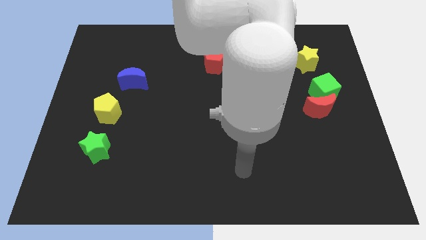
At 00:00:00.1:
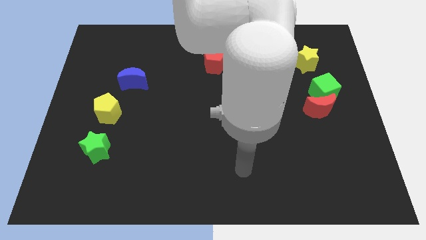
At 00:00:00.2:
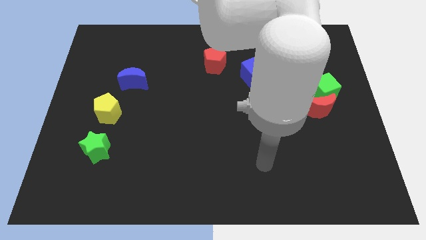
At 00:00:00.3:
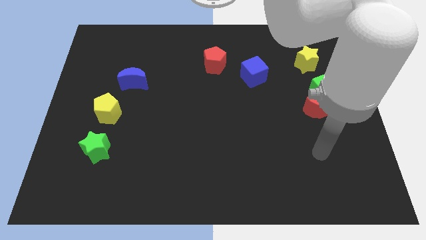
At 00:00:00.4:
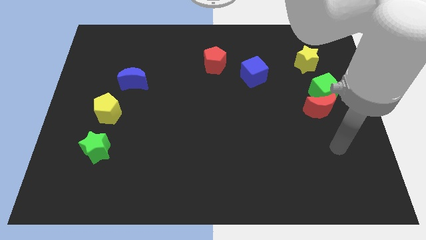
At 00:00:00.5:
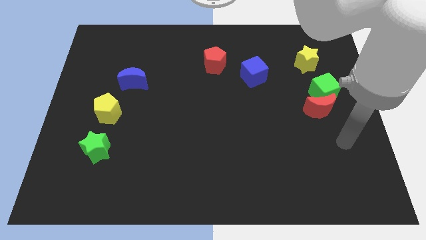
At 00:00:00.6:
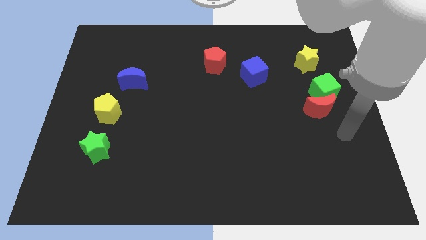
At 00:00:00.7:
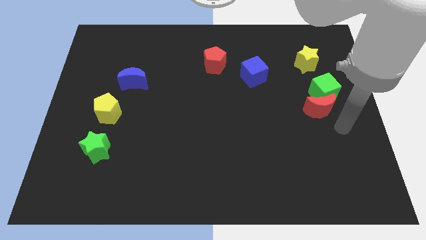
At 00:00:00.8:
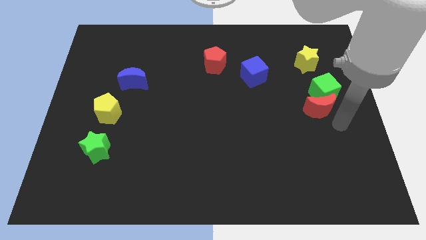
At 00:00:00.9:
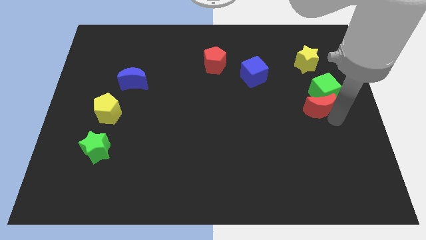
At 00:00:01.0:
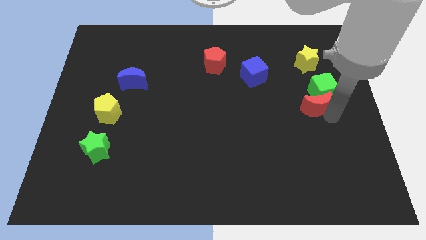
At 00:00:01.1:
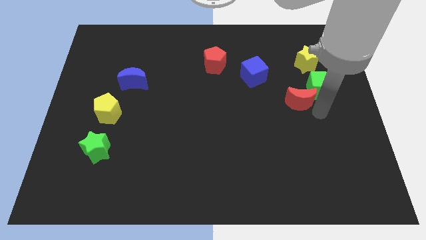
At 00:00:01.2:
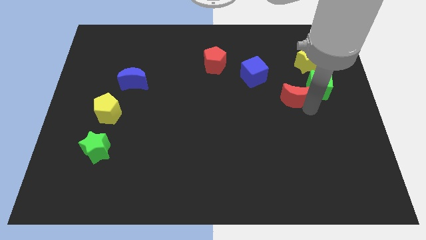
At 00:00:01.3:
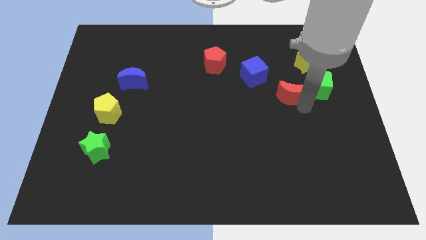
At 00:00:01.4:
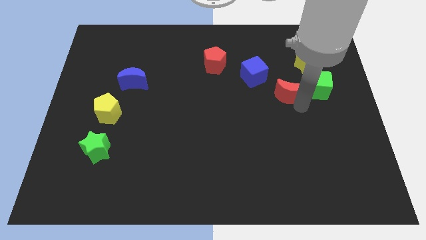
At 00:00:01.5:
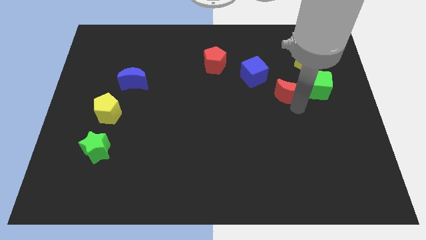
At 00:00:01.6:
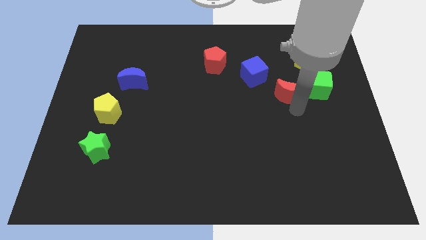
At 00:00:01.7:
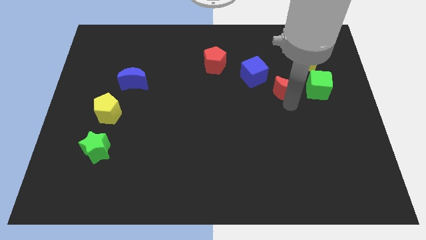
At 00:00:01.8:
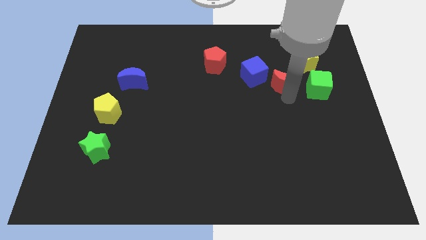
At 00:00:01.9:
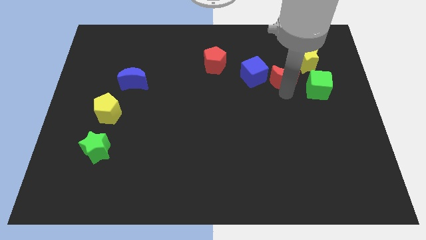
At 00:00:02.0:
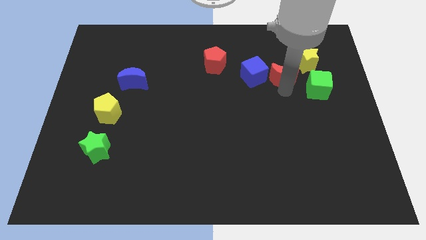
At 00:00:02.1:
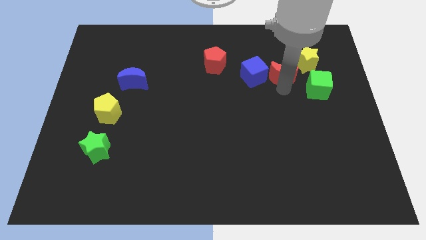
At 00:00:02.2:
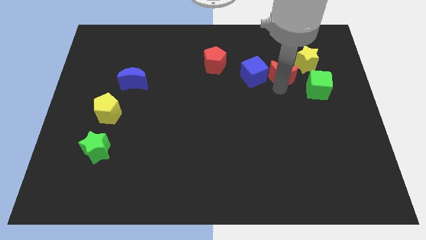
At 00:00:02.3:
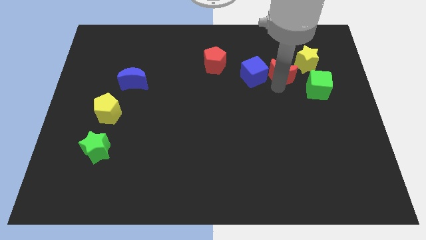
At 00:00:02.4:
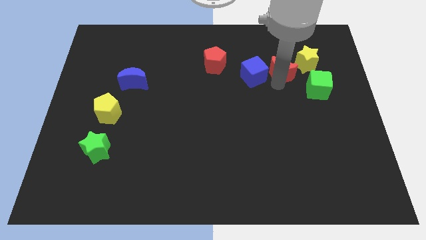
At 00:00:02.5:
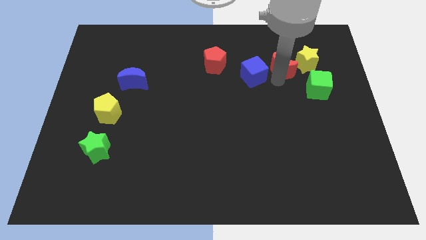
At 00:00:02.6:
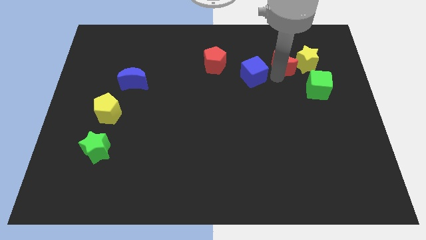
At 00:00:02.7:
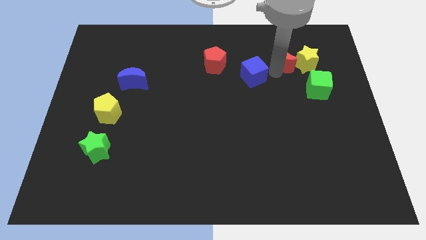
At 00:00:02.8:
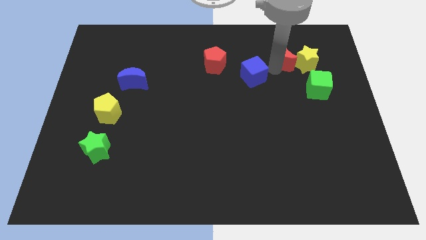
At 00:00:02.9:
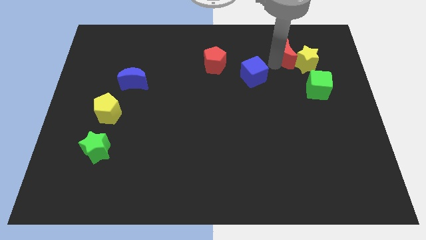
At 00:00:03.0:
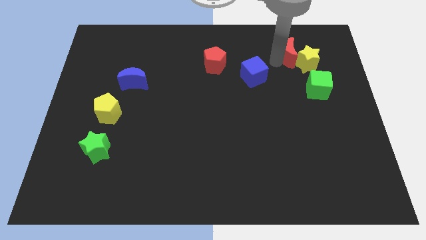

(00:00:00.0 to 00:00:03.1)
push the red moon towards the yellow star

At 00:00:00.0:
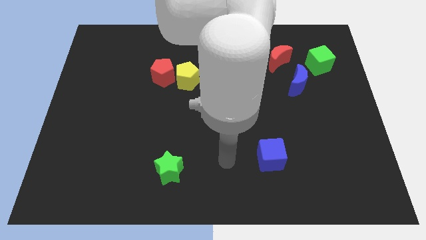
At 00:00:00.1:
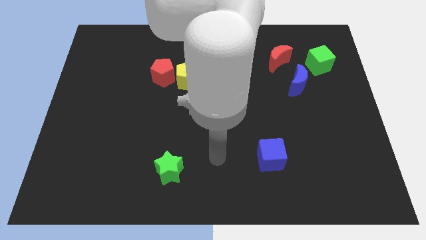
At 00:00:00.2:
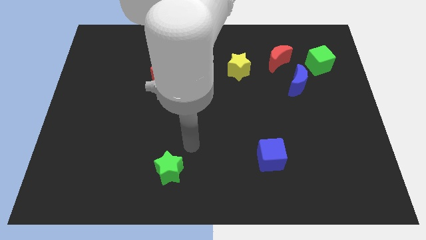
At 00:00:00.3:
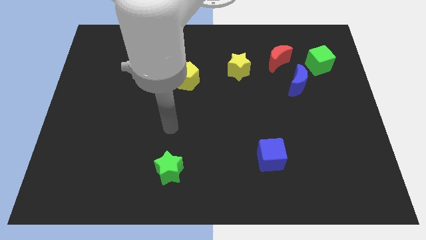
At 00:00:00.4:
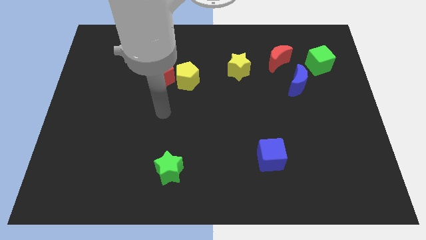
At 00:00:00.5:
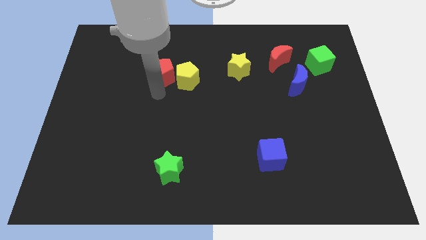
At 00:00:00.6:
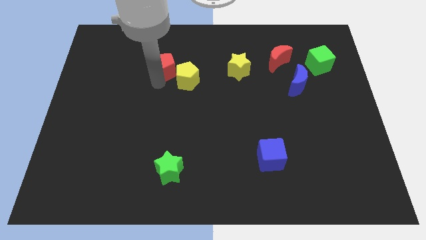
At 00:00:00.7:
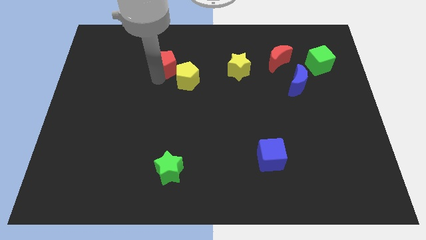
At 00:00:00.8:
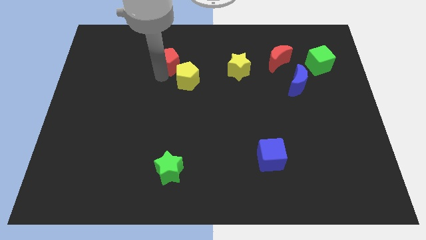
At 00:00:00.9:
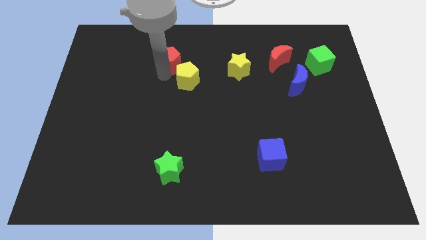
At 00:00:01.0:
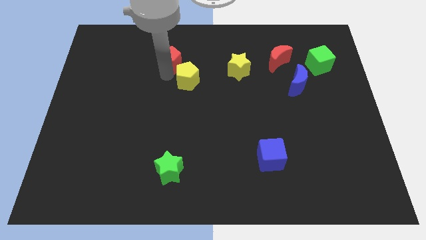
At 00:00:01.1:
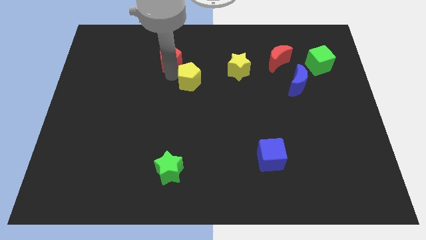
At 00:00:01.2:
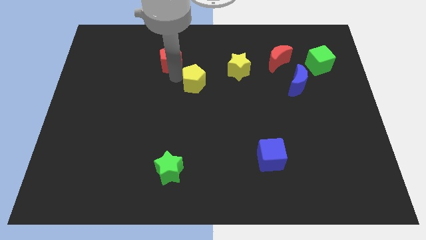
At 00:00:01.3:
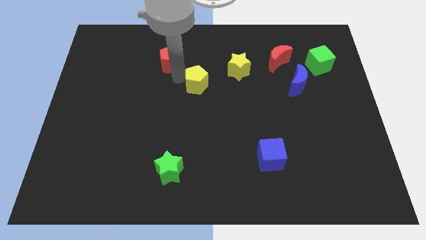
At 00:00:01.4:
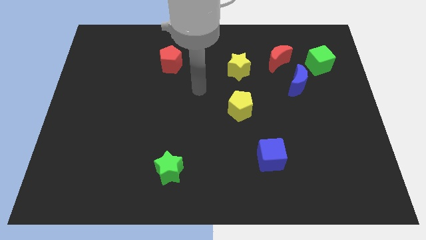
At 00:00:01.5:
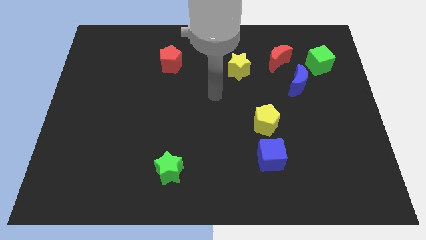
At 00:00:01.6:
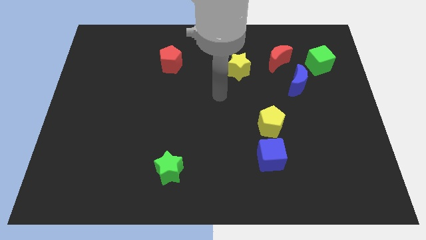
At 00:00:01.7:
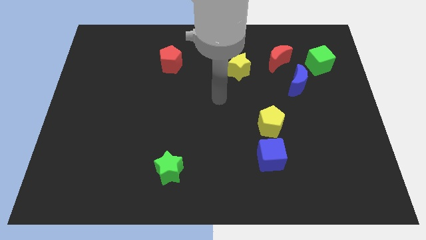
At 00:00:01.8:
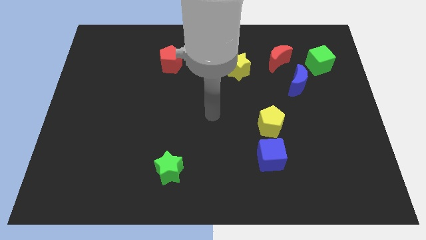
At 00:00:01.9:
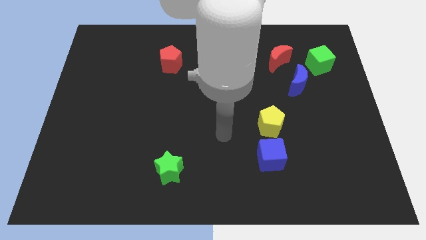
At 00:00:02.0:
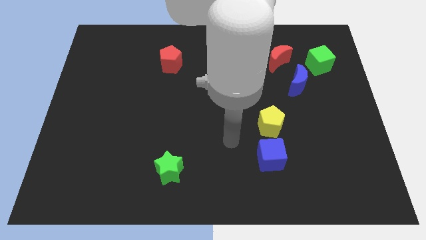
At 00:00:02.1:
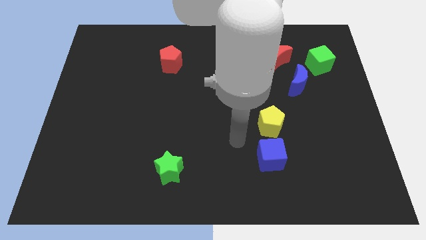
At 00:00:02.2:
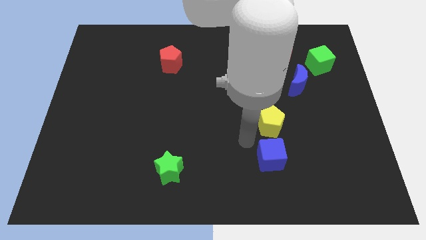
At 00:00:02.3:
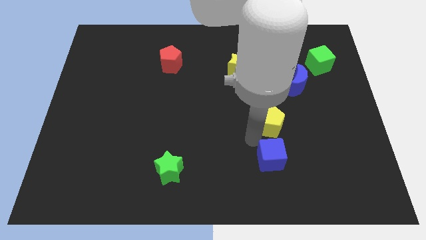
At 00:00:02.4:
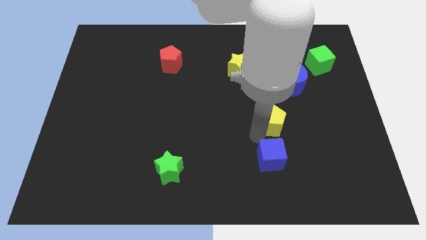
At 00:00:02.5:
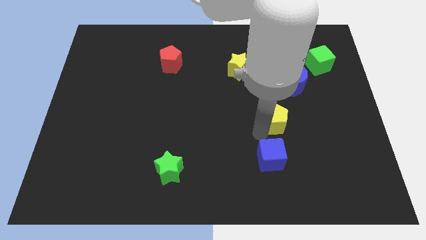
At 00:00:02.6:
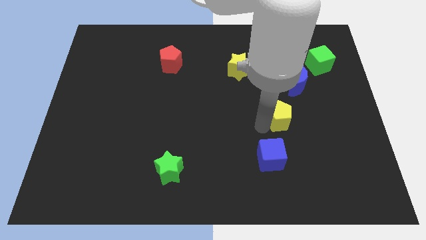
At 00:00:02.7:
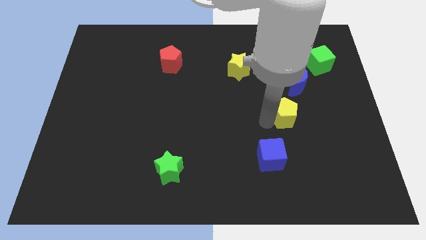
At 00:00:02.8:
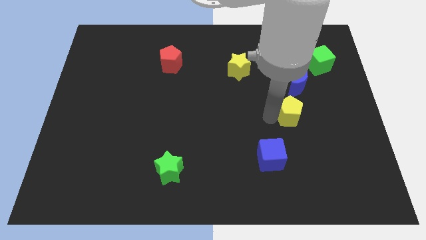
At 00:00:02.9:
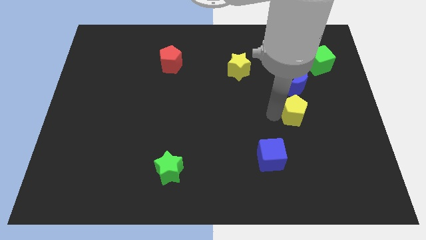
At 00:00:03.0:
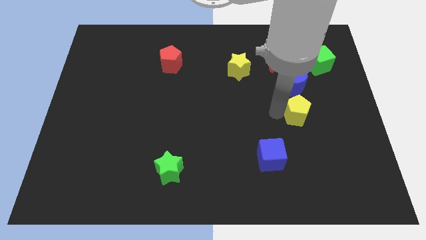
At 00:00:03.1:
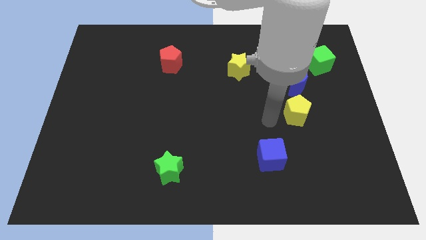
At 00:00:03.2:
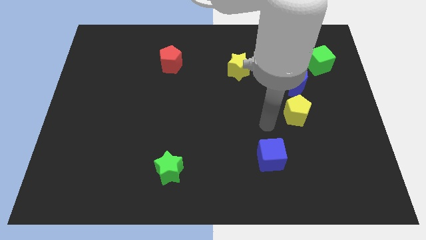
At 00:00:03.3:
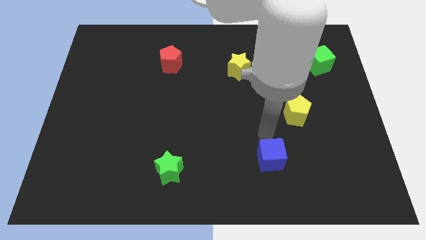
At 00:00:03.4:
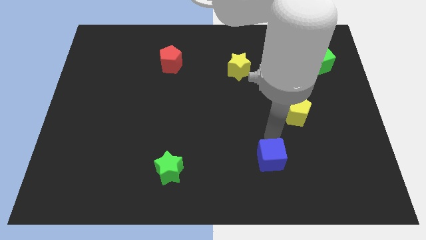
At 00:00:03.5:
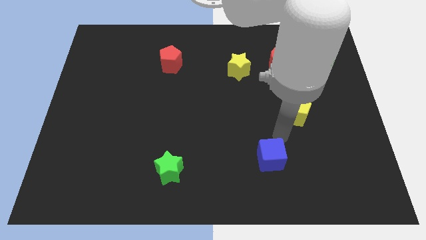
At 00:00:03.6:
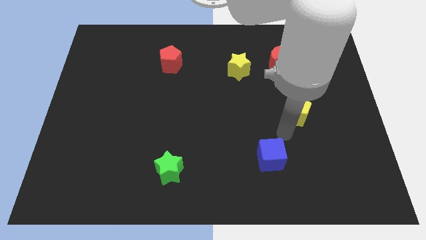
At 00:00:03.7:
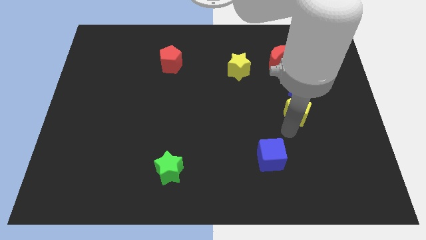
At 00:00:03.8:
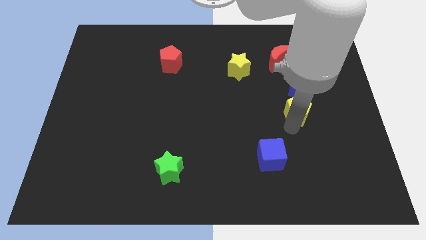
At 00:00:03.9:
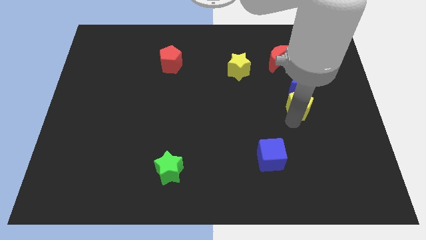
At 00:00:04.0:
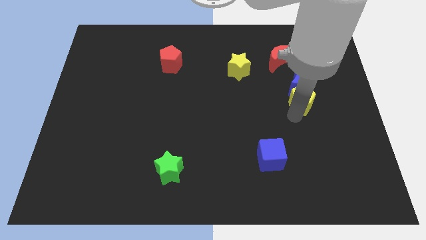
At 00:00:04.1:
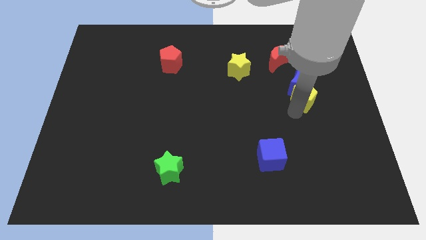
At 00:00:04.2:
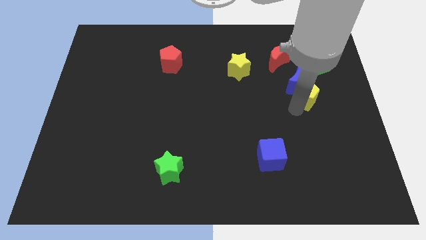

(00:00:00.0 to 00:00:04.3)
slide the yellow pentagon close to the blue moon

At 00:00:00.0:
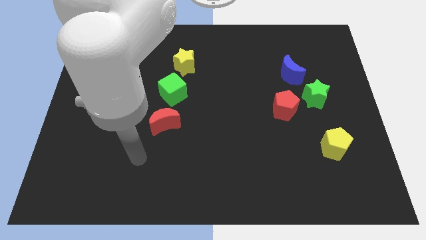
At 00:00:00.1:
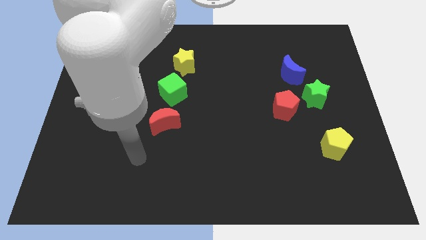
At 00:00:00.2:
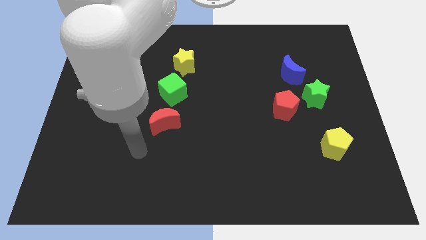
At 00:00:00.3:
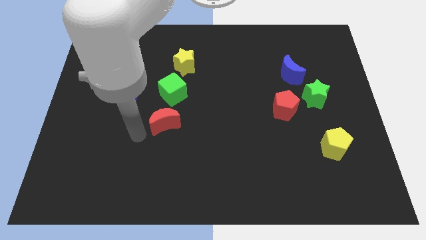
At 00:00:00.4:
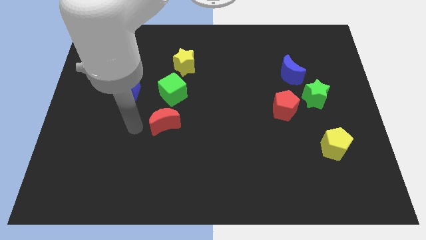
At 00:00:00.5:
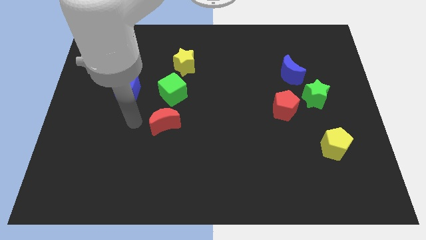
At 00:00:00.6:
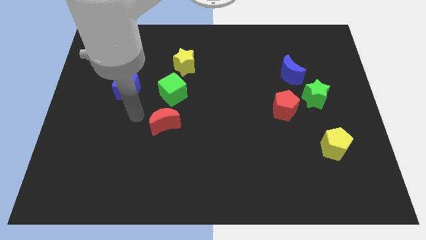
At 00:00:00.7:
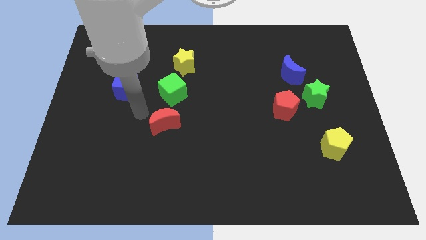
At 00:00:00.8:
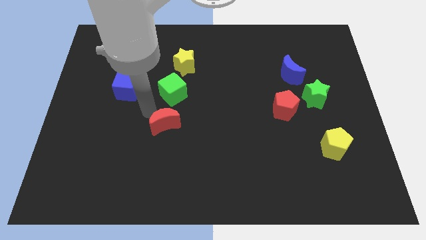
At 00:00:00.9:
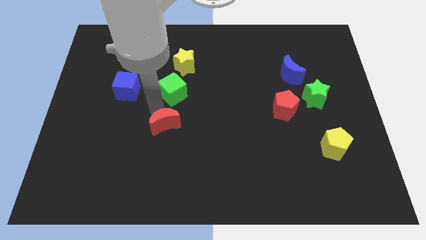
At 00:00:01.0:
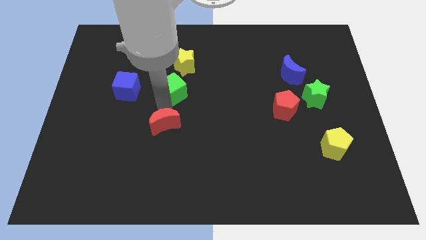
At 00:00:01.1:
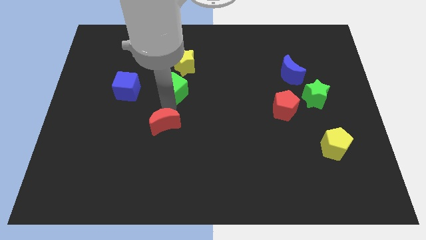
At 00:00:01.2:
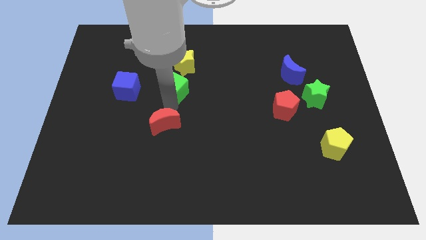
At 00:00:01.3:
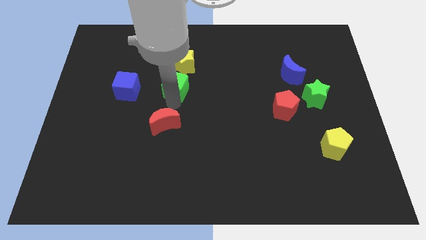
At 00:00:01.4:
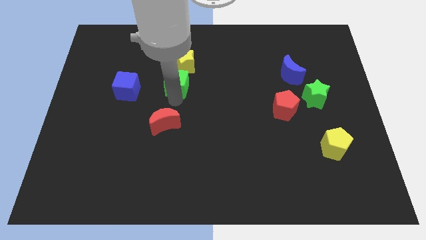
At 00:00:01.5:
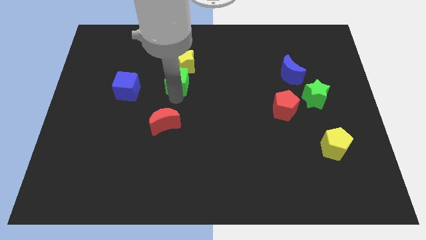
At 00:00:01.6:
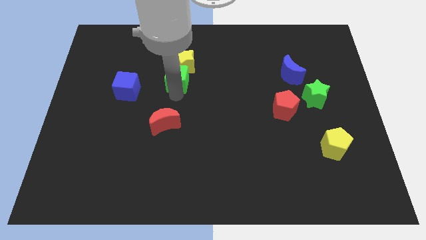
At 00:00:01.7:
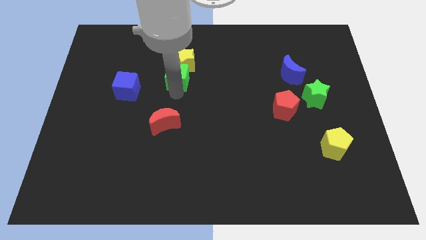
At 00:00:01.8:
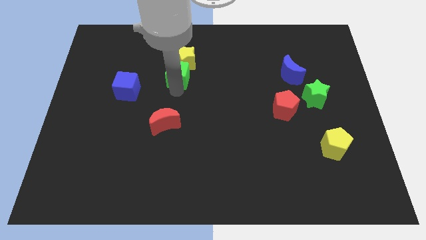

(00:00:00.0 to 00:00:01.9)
move the green cube next to the yellow star
